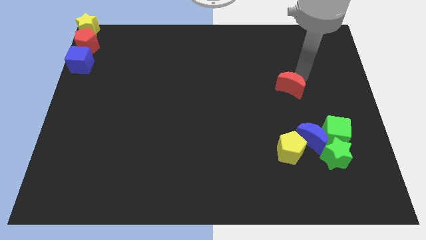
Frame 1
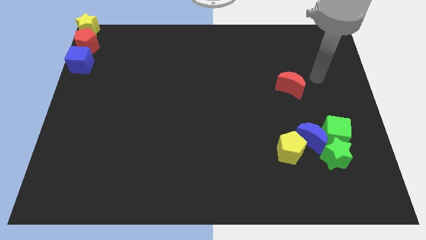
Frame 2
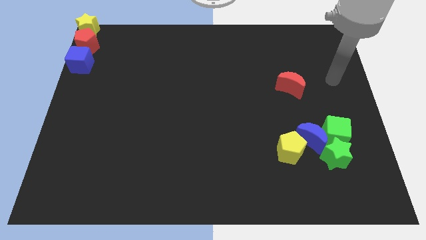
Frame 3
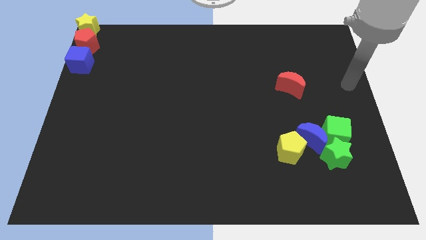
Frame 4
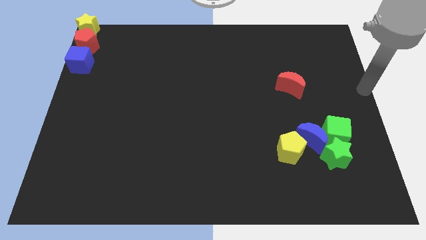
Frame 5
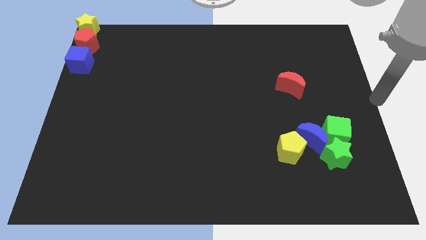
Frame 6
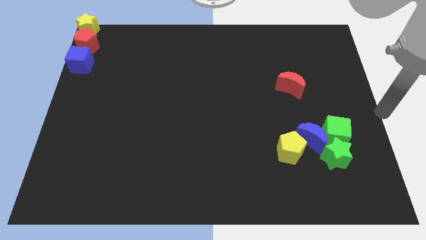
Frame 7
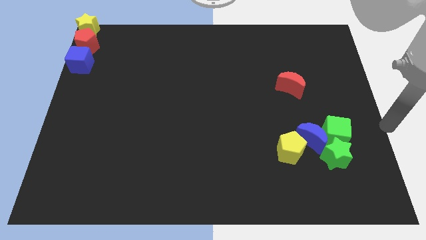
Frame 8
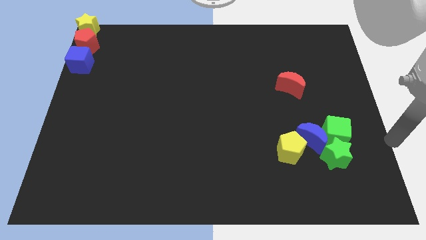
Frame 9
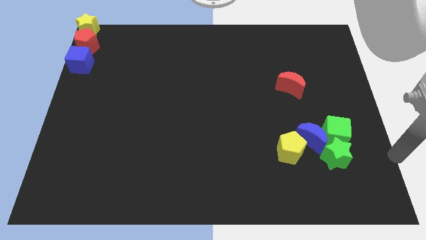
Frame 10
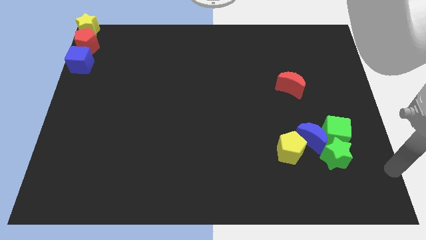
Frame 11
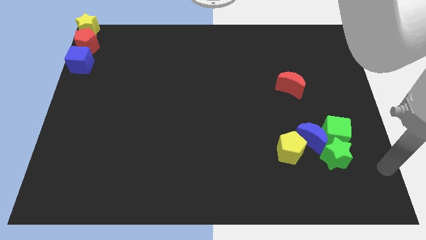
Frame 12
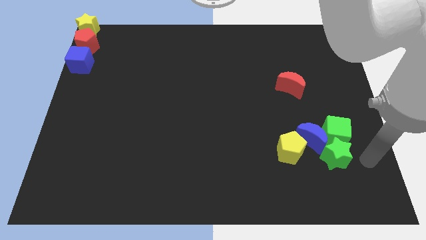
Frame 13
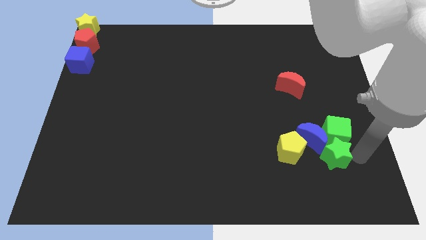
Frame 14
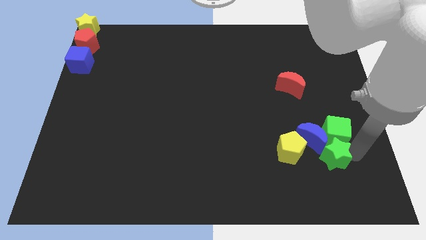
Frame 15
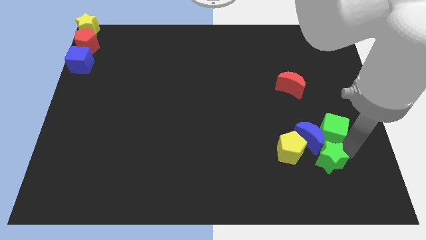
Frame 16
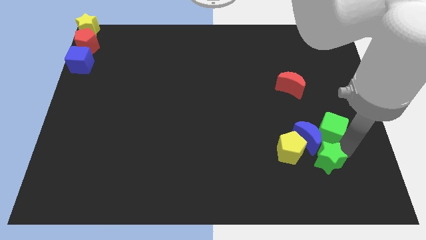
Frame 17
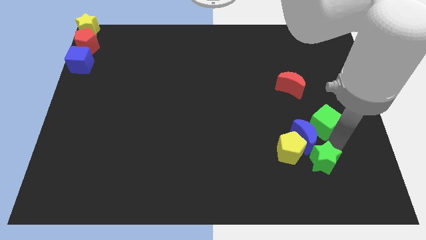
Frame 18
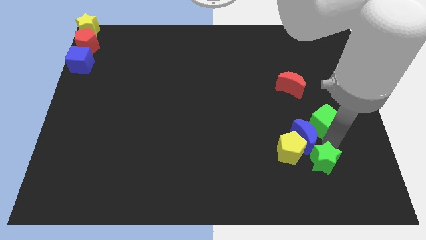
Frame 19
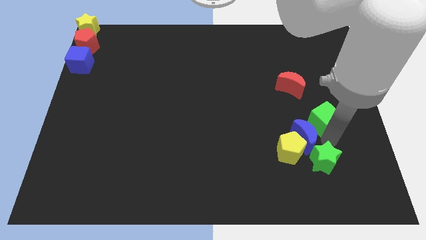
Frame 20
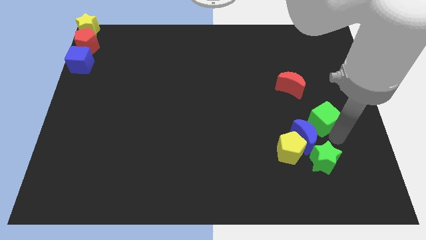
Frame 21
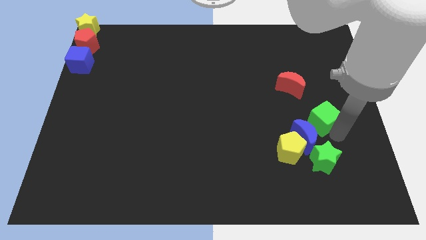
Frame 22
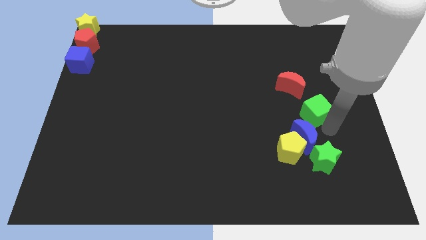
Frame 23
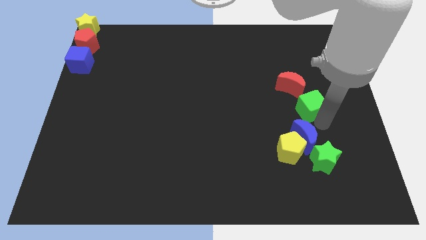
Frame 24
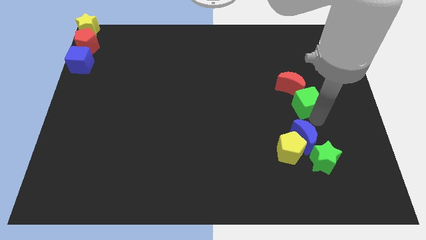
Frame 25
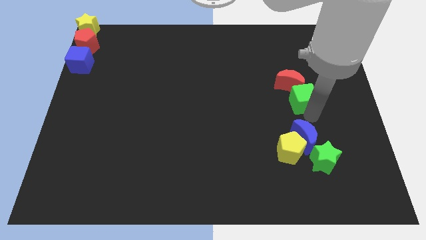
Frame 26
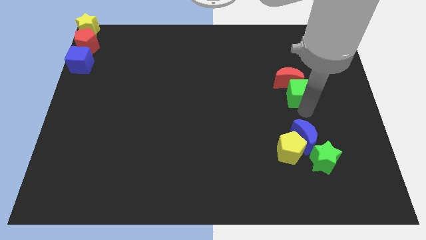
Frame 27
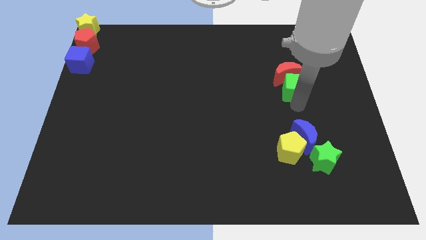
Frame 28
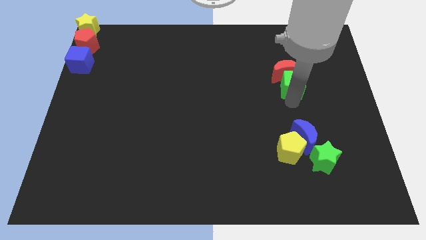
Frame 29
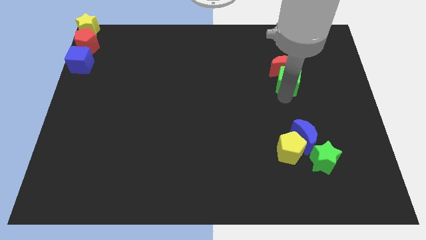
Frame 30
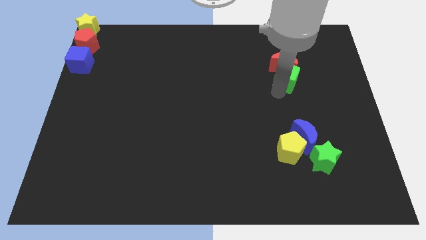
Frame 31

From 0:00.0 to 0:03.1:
separate the green cube and the green star

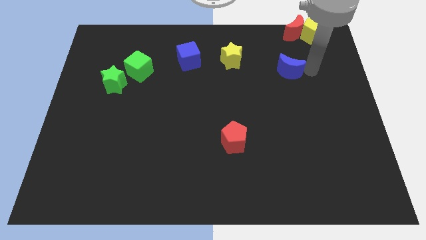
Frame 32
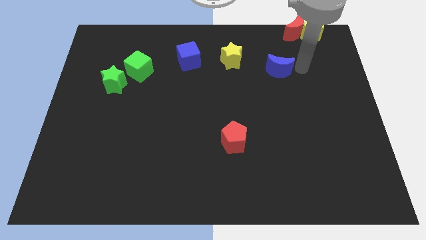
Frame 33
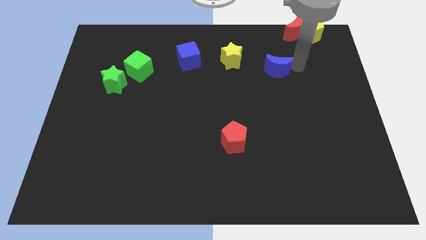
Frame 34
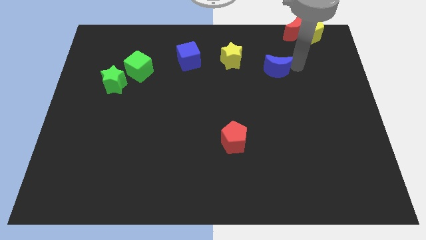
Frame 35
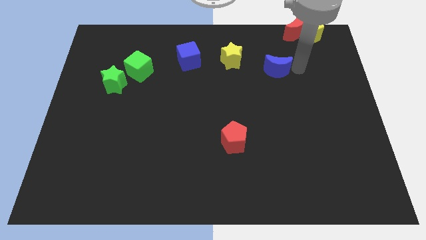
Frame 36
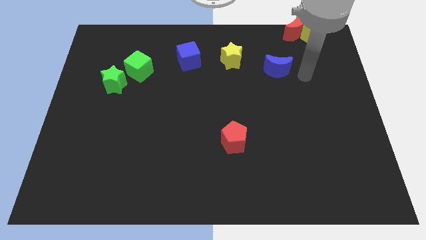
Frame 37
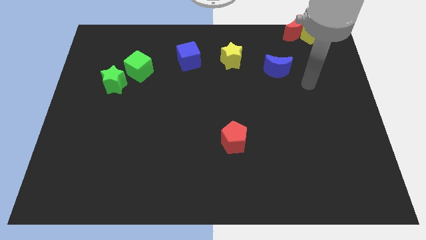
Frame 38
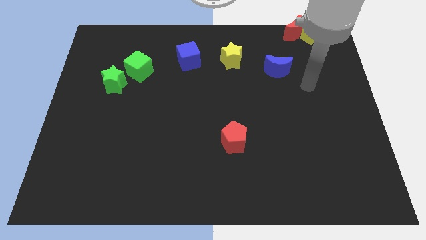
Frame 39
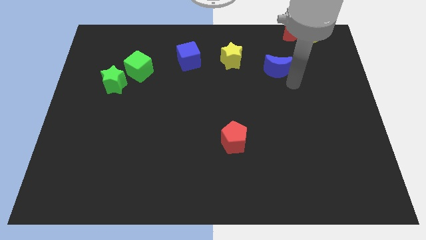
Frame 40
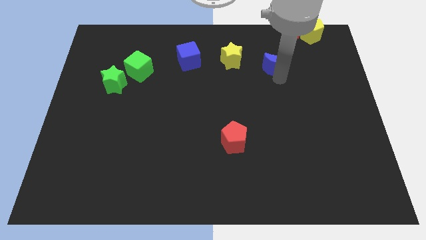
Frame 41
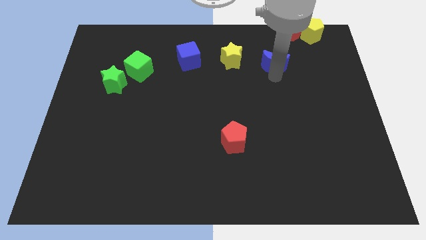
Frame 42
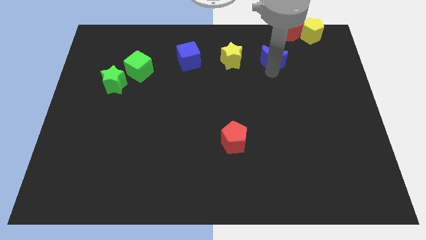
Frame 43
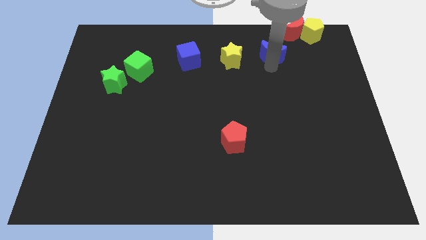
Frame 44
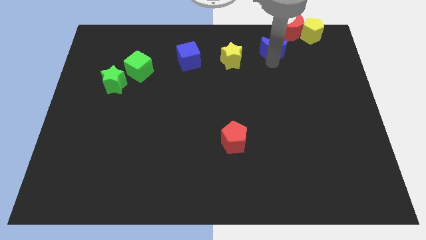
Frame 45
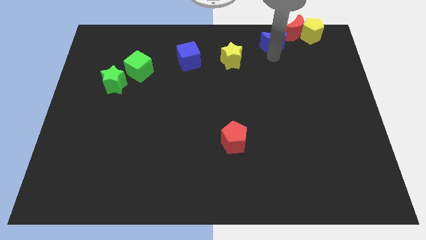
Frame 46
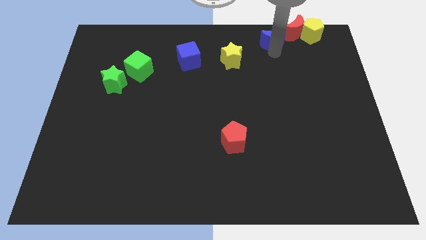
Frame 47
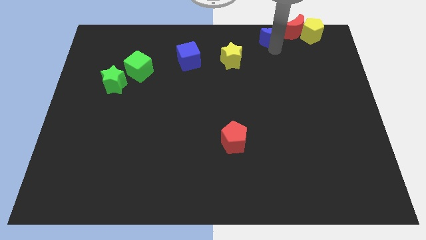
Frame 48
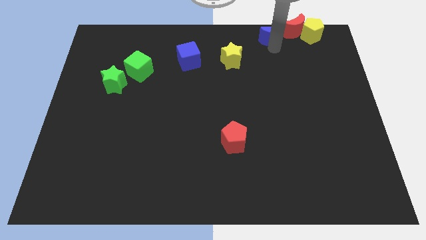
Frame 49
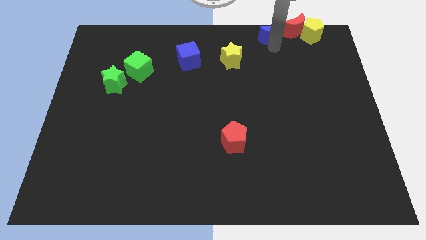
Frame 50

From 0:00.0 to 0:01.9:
place the blue moon near to the red crescent

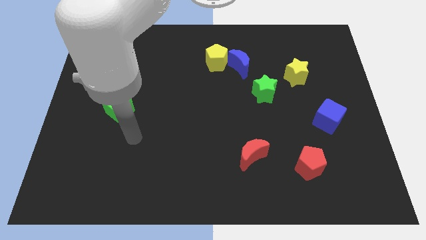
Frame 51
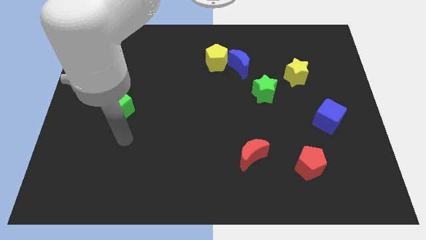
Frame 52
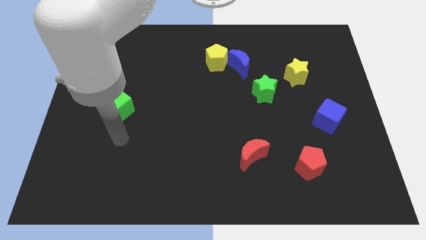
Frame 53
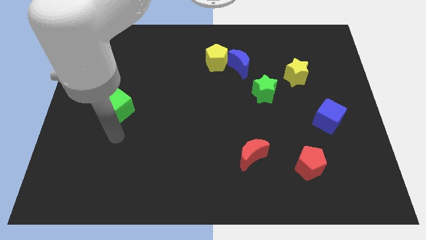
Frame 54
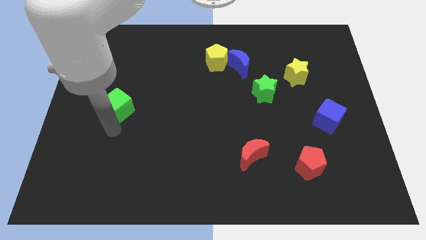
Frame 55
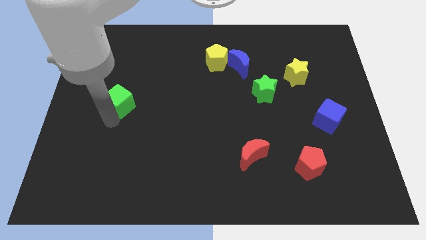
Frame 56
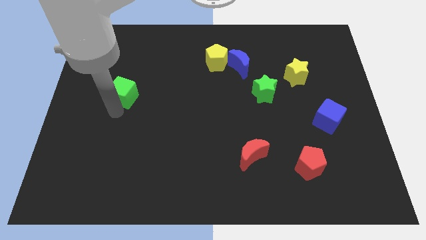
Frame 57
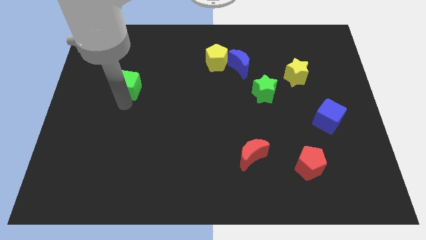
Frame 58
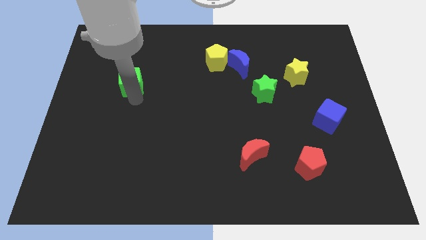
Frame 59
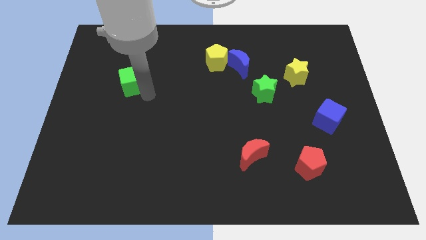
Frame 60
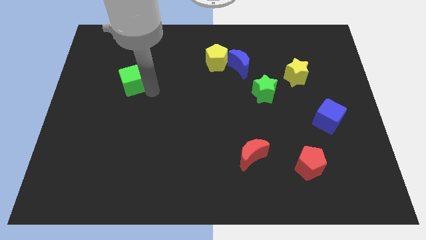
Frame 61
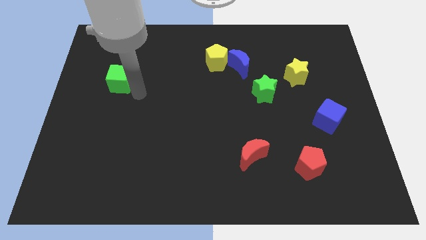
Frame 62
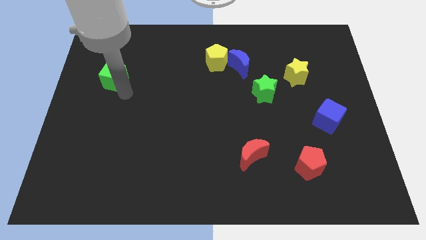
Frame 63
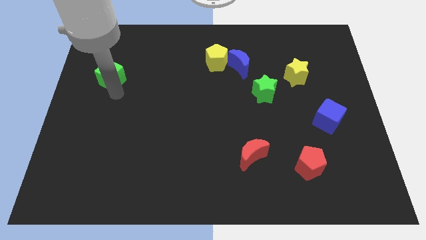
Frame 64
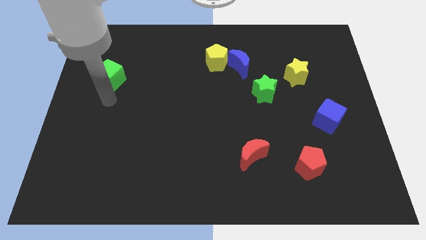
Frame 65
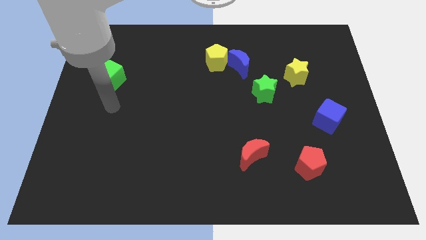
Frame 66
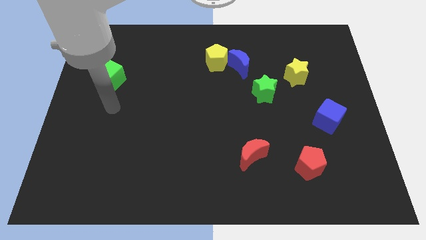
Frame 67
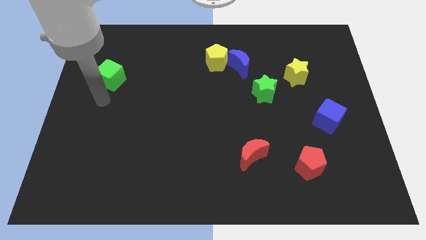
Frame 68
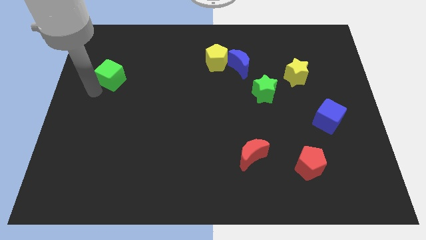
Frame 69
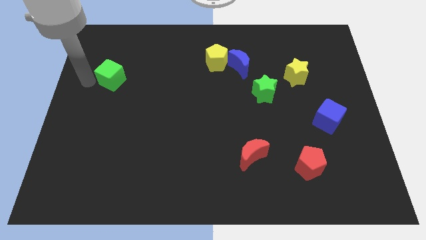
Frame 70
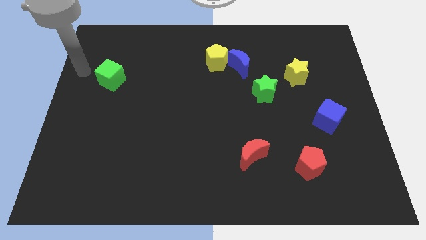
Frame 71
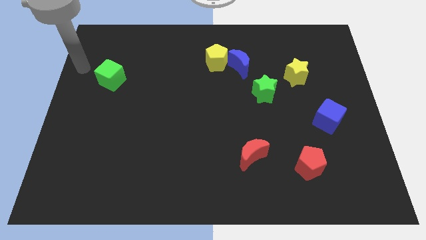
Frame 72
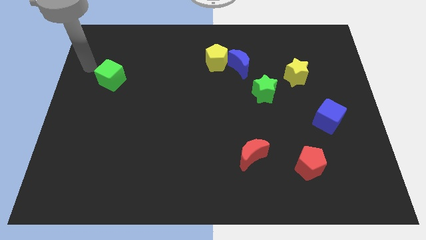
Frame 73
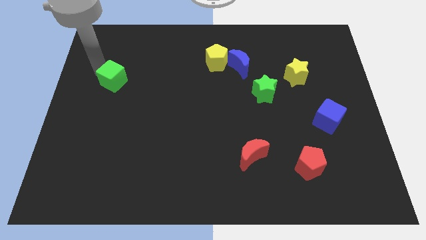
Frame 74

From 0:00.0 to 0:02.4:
push the green cube towards the top left of the board

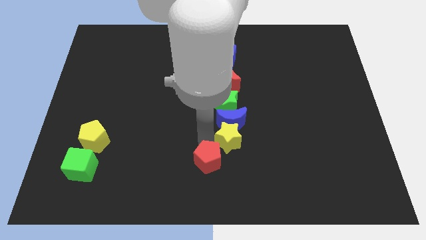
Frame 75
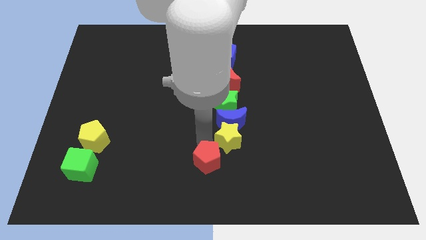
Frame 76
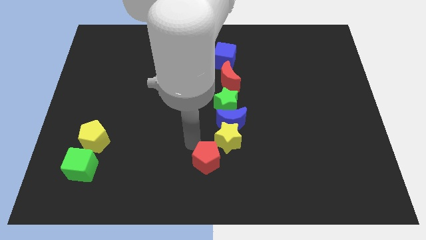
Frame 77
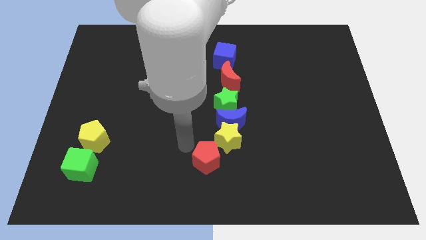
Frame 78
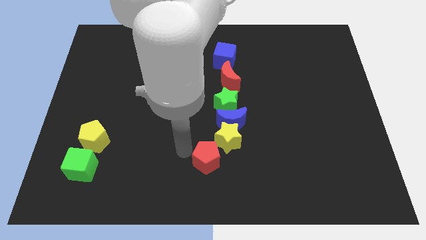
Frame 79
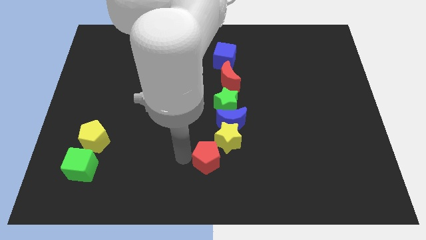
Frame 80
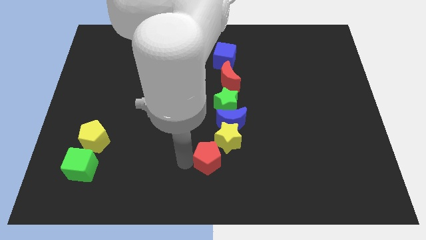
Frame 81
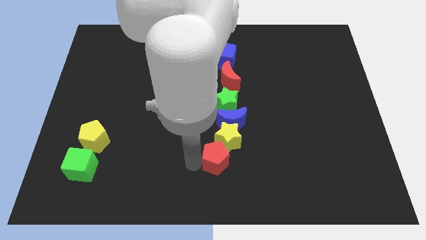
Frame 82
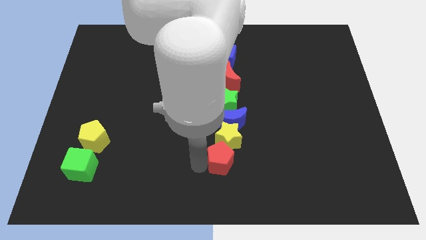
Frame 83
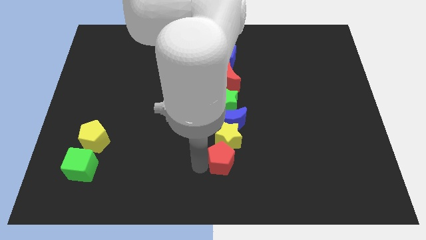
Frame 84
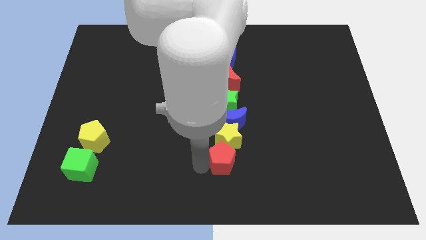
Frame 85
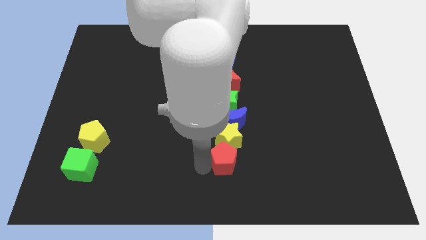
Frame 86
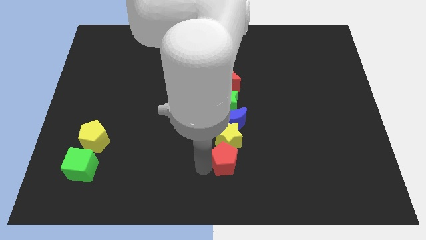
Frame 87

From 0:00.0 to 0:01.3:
place the red pentagon below the yellow star

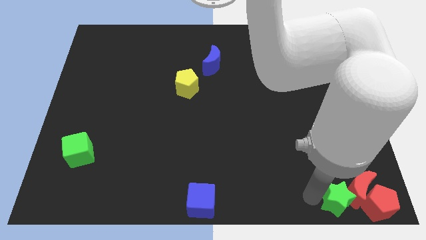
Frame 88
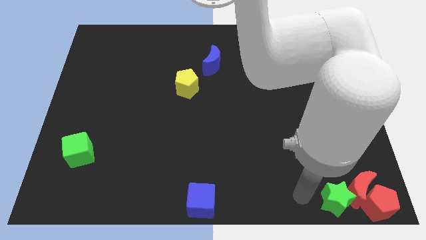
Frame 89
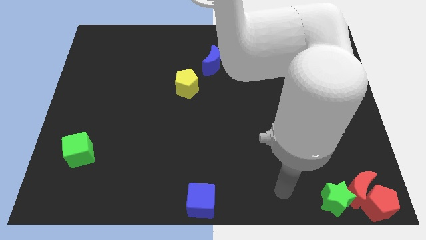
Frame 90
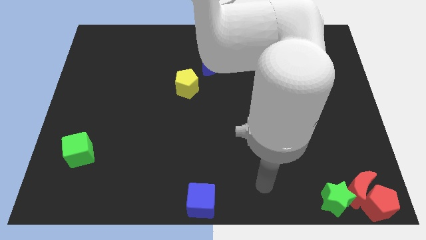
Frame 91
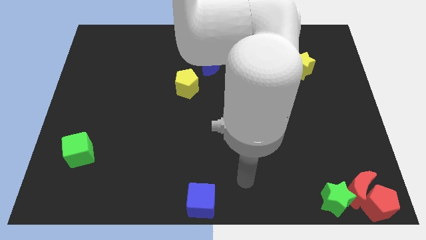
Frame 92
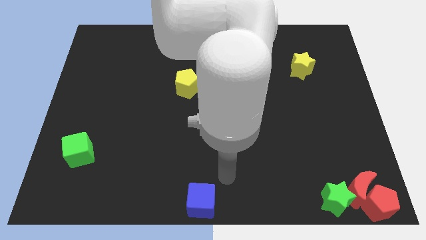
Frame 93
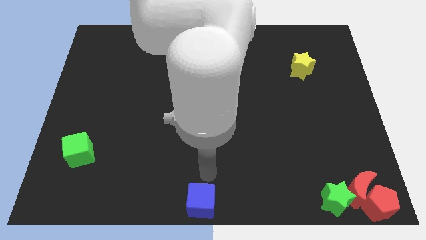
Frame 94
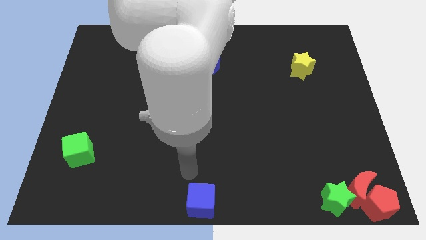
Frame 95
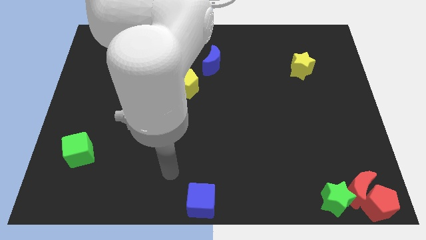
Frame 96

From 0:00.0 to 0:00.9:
move your arm away from green star
